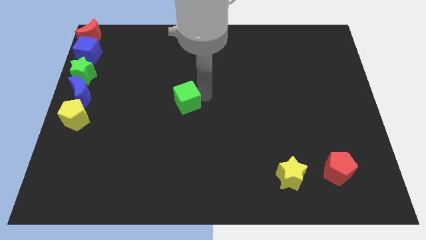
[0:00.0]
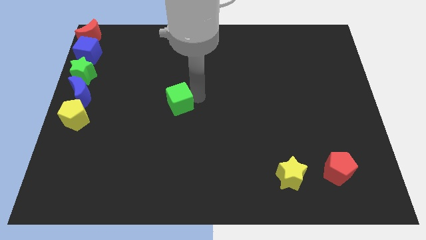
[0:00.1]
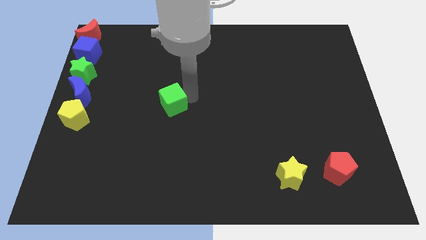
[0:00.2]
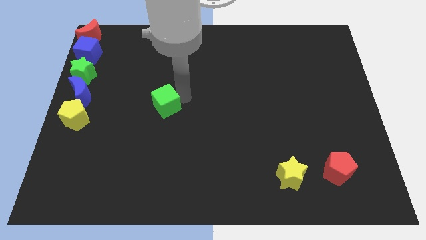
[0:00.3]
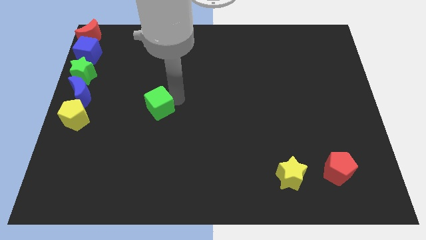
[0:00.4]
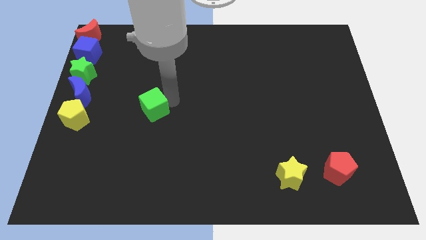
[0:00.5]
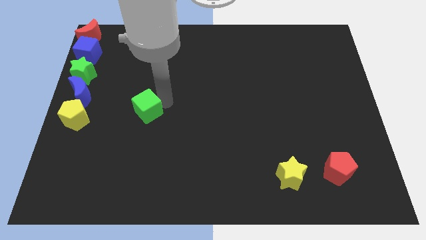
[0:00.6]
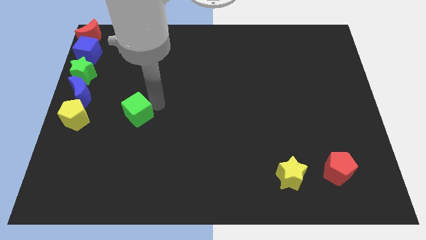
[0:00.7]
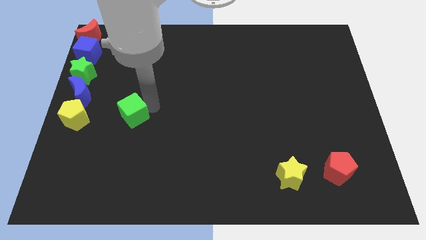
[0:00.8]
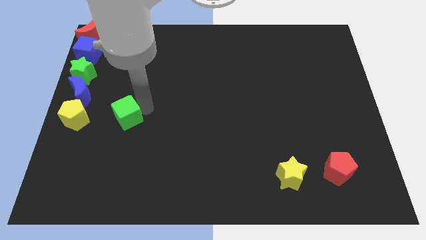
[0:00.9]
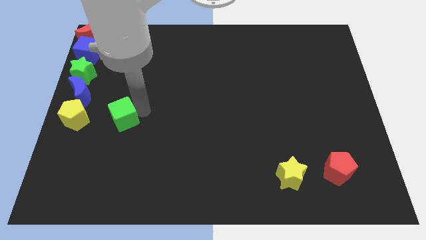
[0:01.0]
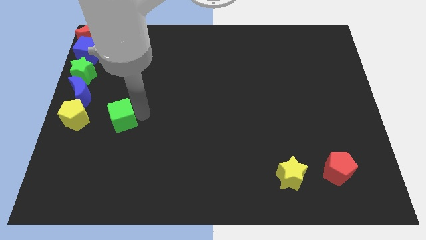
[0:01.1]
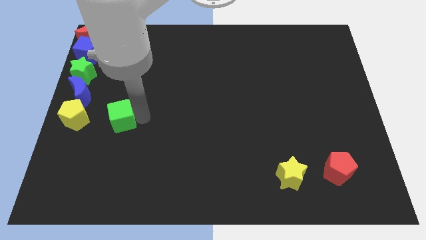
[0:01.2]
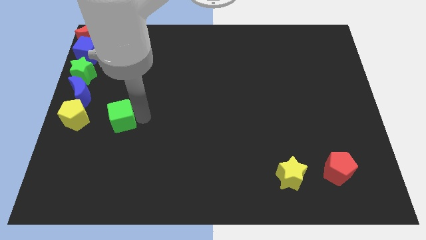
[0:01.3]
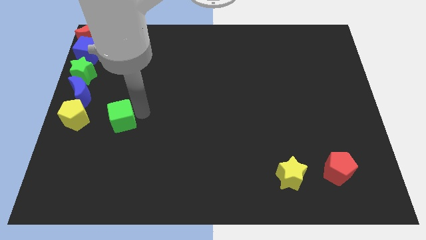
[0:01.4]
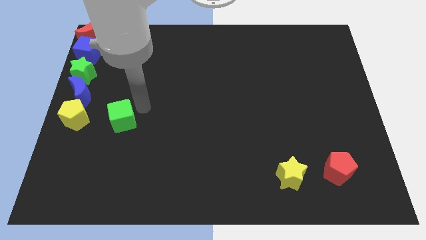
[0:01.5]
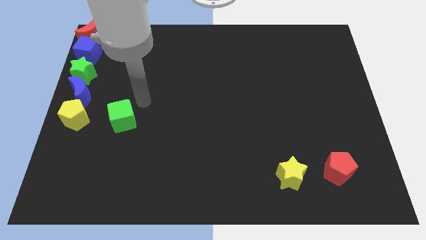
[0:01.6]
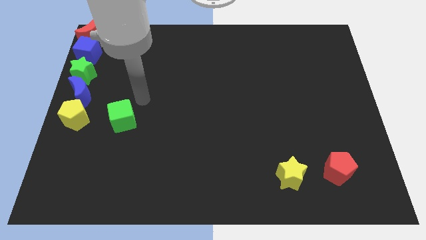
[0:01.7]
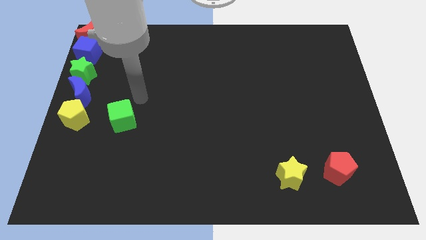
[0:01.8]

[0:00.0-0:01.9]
move green cube towards the yellow pentagon

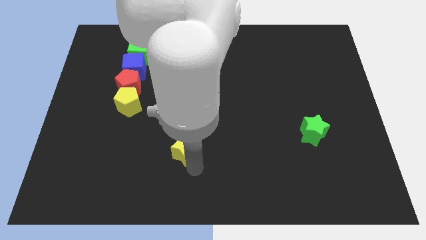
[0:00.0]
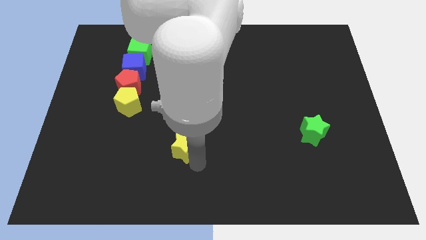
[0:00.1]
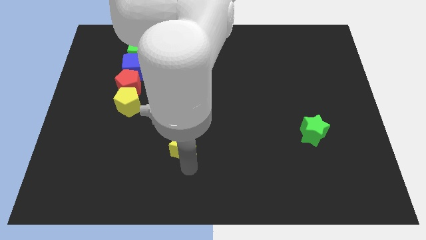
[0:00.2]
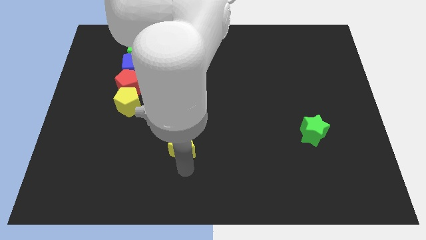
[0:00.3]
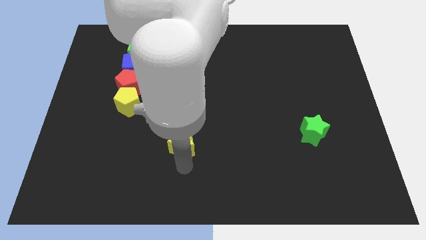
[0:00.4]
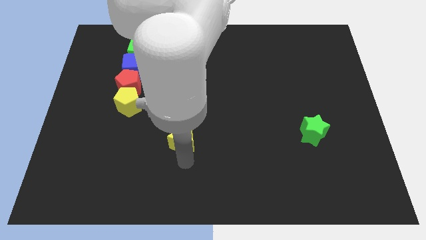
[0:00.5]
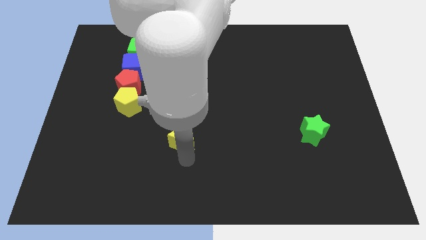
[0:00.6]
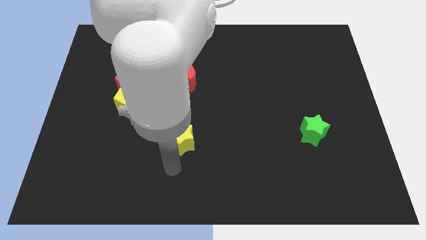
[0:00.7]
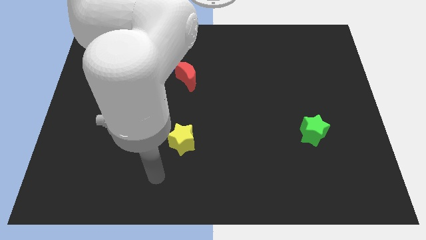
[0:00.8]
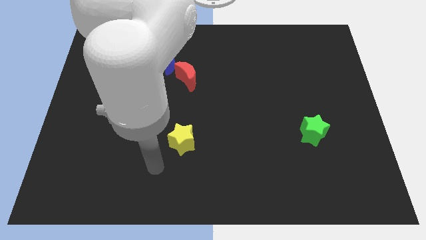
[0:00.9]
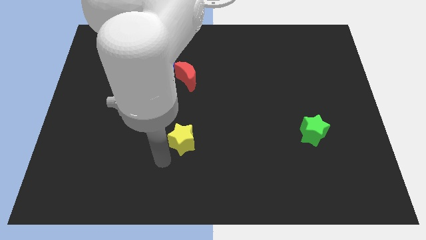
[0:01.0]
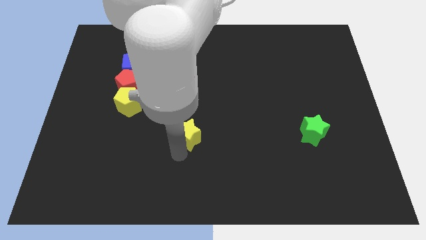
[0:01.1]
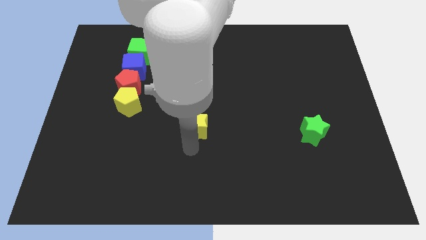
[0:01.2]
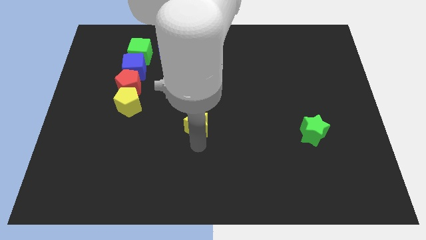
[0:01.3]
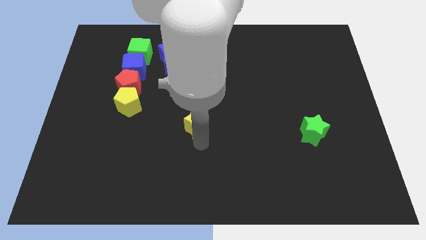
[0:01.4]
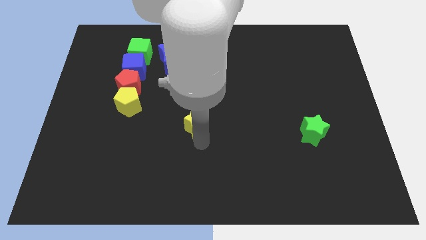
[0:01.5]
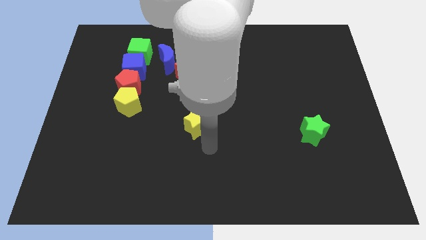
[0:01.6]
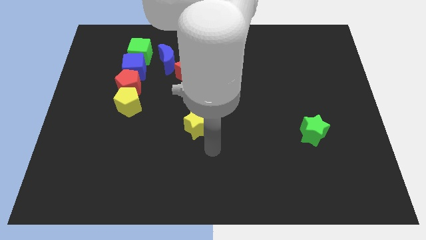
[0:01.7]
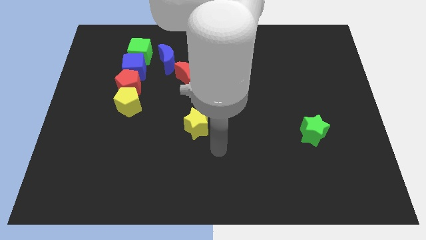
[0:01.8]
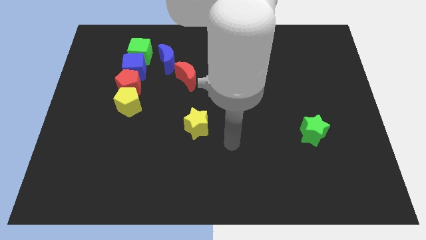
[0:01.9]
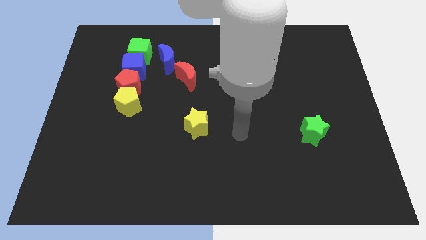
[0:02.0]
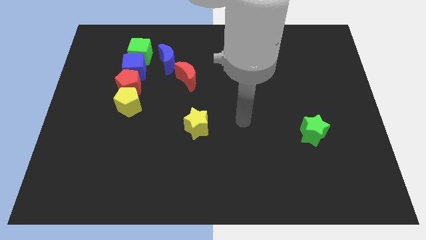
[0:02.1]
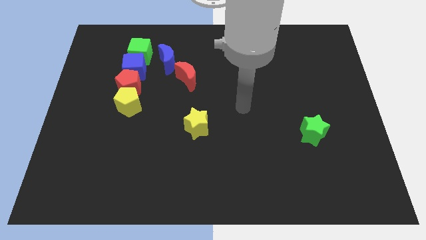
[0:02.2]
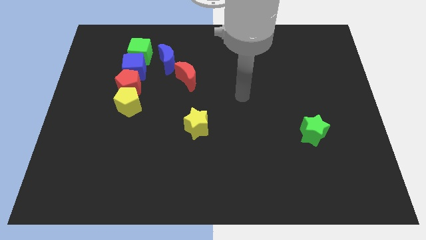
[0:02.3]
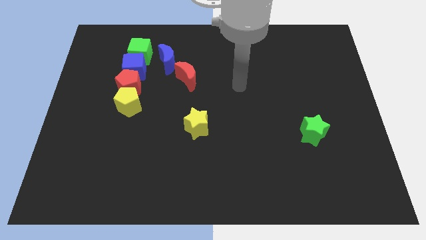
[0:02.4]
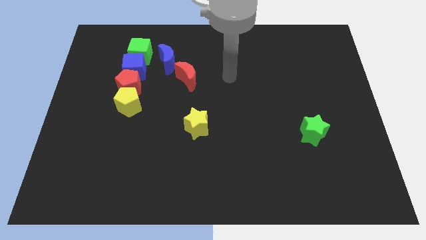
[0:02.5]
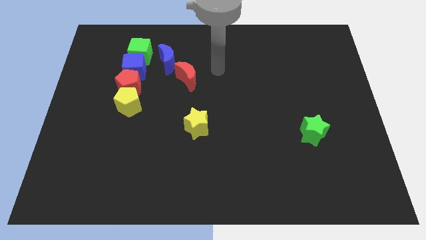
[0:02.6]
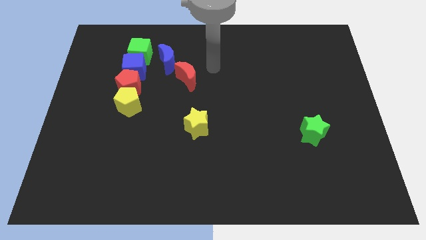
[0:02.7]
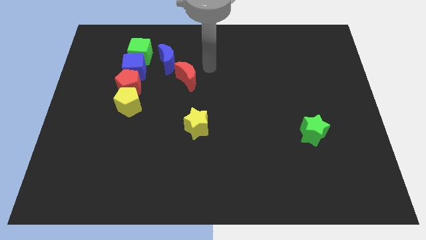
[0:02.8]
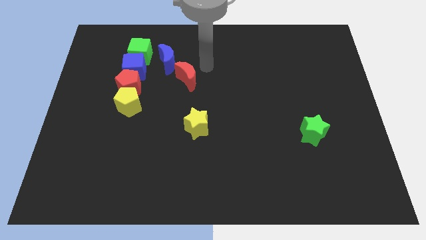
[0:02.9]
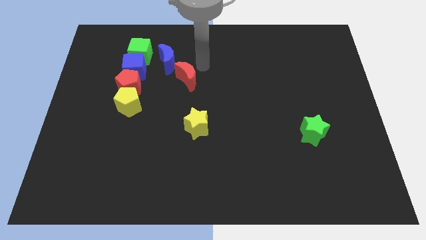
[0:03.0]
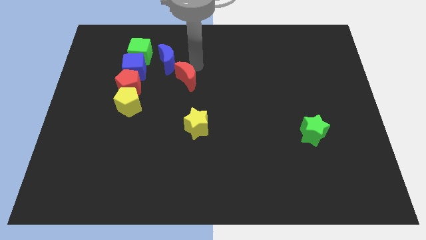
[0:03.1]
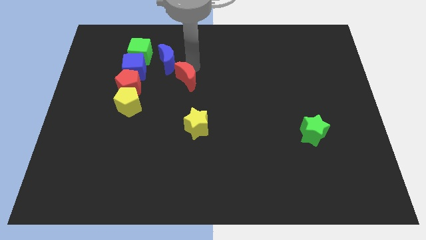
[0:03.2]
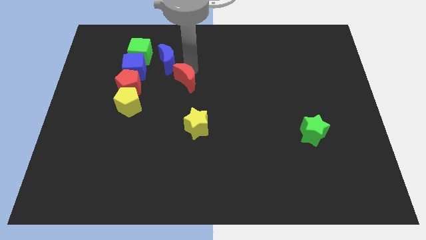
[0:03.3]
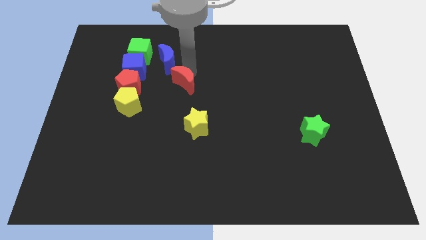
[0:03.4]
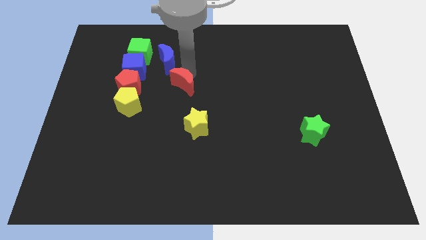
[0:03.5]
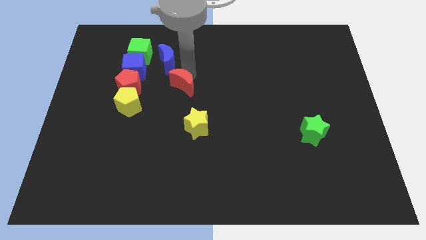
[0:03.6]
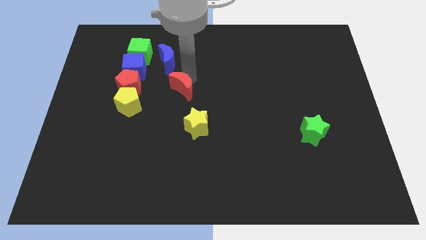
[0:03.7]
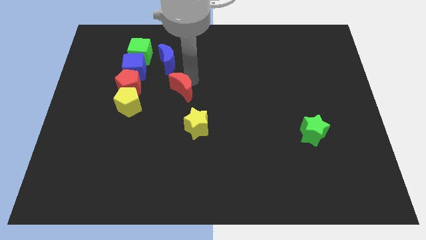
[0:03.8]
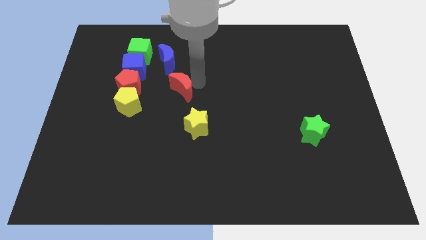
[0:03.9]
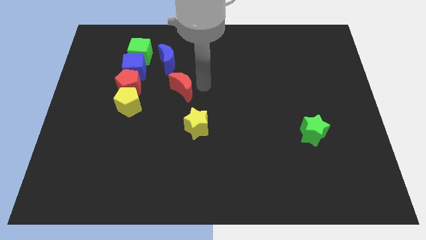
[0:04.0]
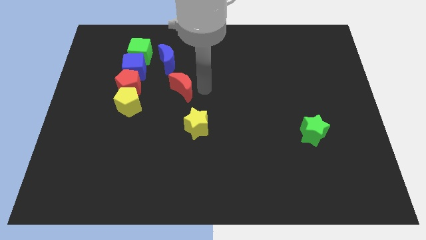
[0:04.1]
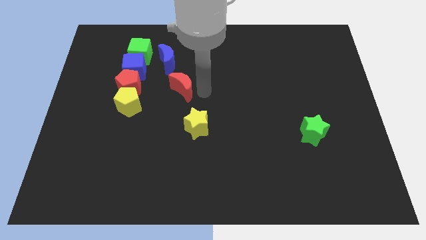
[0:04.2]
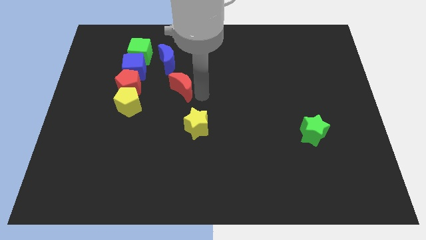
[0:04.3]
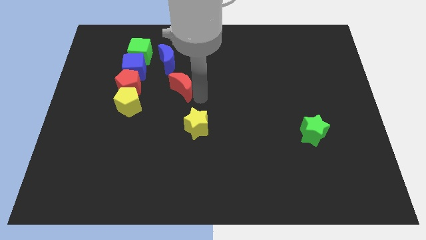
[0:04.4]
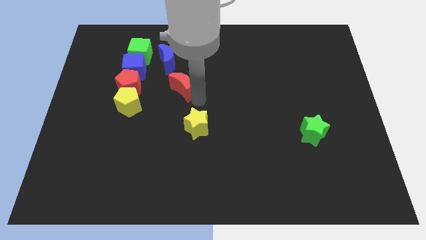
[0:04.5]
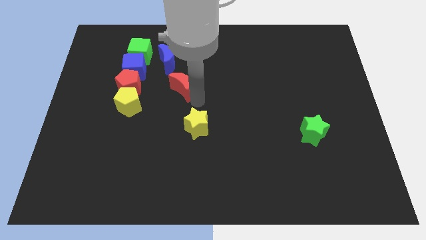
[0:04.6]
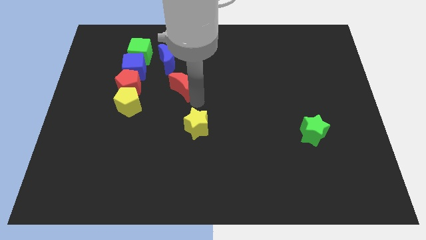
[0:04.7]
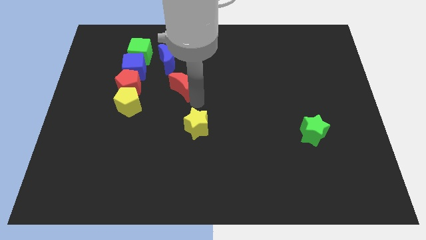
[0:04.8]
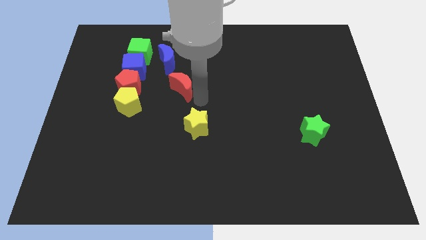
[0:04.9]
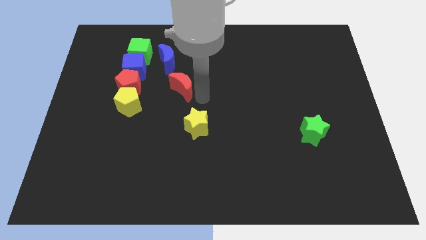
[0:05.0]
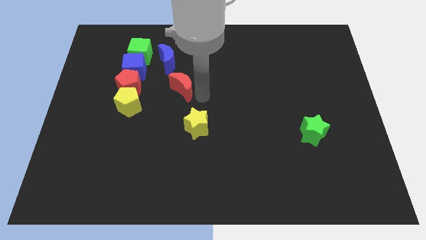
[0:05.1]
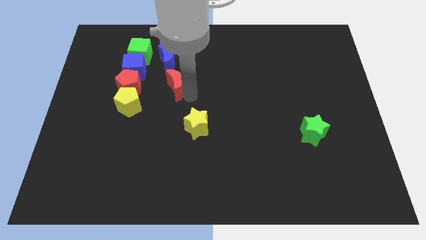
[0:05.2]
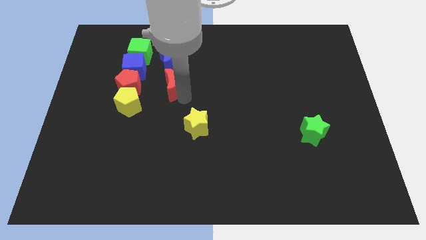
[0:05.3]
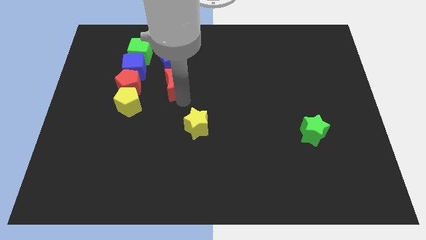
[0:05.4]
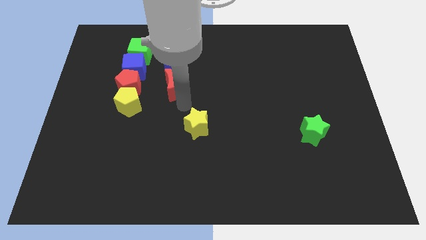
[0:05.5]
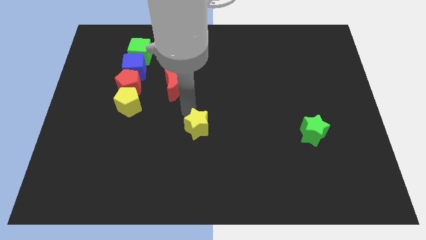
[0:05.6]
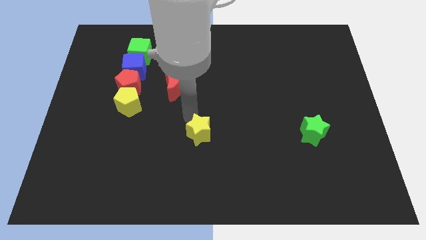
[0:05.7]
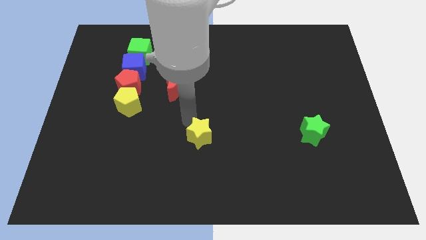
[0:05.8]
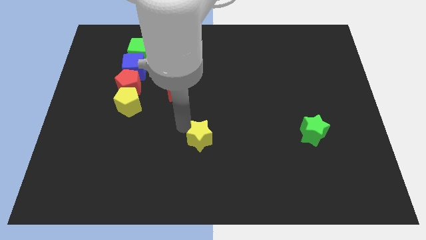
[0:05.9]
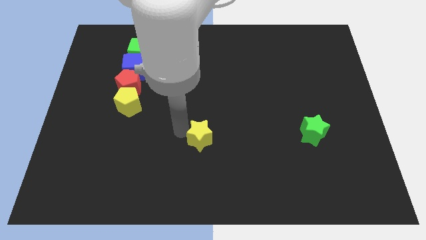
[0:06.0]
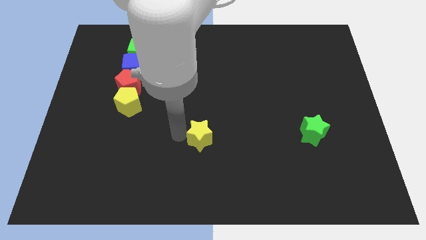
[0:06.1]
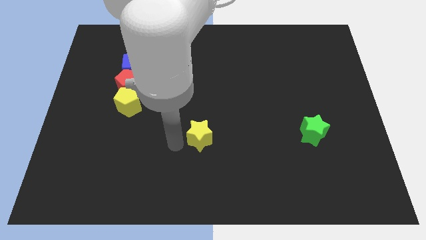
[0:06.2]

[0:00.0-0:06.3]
place the red moon to the right of red pentagon

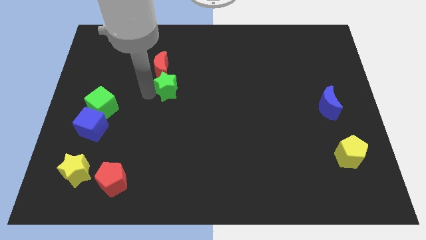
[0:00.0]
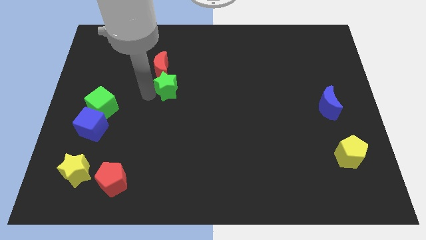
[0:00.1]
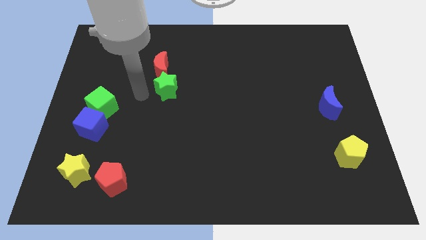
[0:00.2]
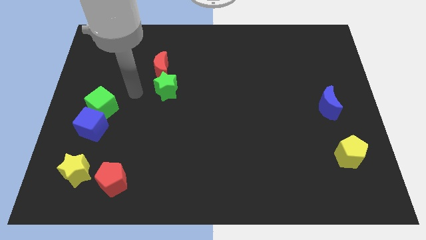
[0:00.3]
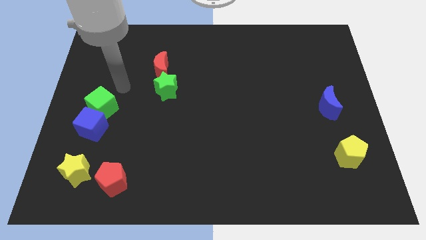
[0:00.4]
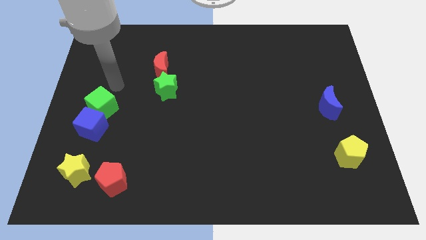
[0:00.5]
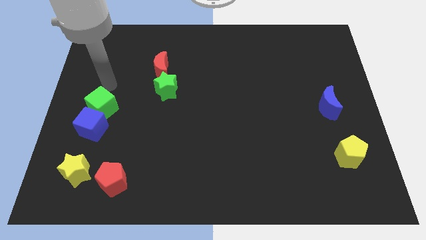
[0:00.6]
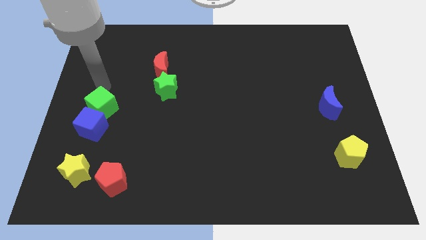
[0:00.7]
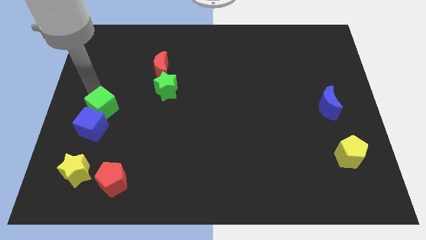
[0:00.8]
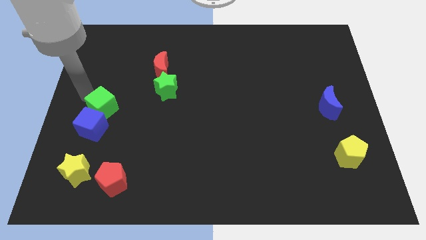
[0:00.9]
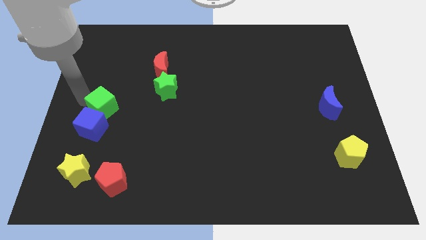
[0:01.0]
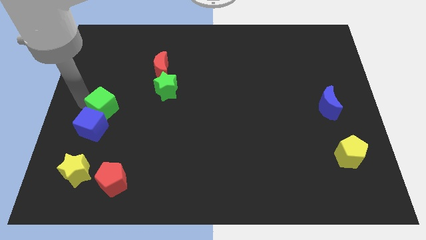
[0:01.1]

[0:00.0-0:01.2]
move your arm to the left of the green cube
